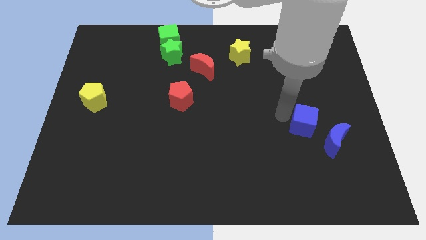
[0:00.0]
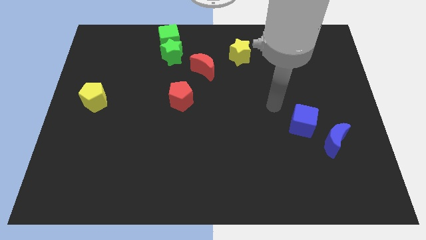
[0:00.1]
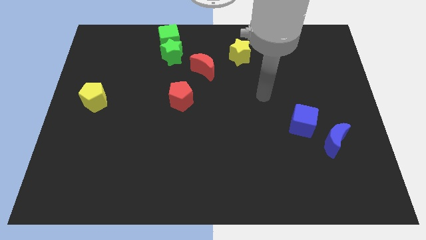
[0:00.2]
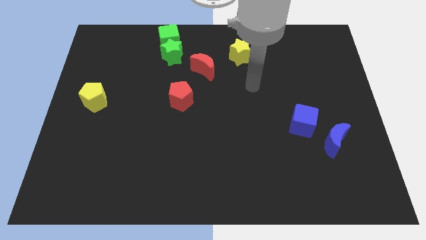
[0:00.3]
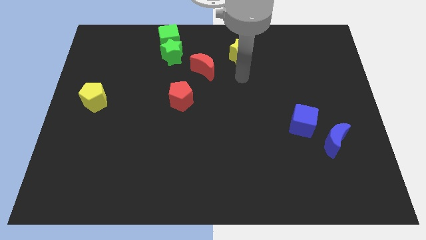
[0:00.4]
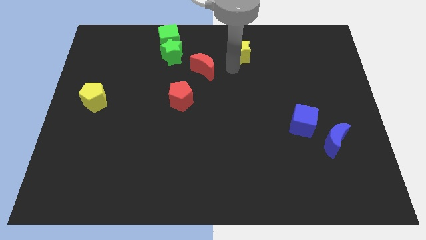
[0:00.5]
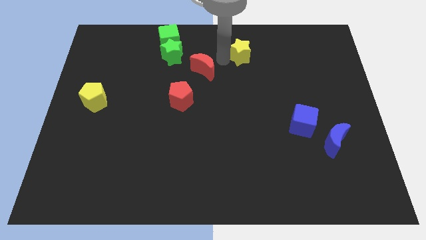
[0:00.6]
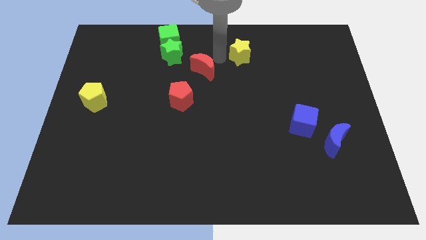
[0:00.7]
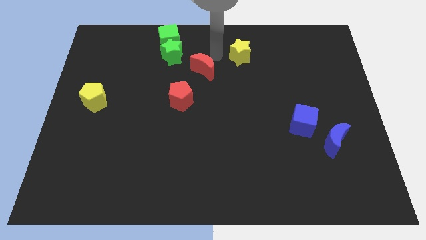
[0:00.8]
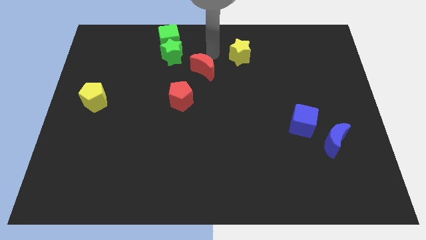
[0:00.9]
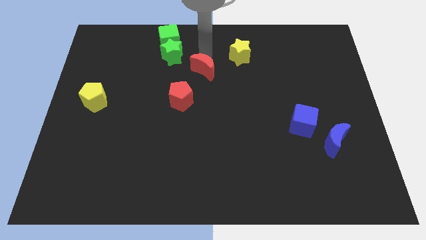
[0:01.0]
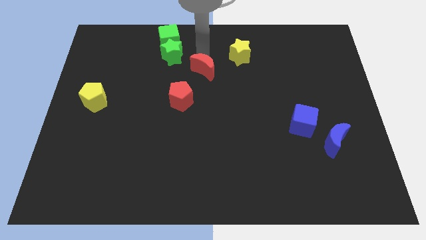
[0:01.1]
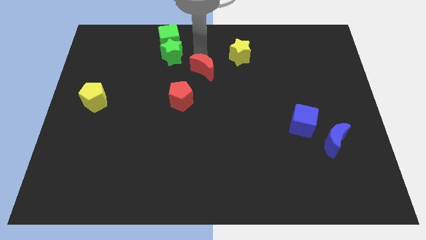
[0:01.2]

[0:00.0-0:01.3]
move the arm to the top of the red crescent

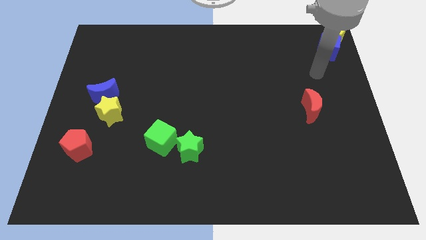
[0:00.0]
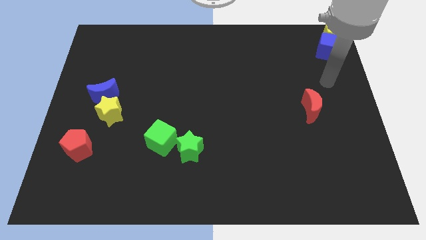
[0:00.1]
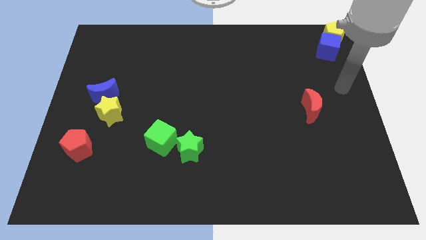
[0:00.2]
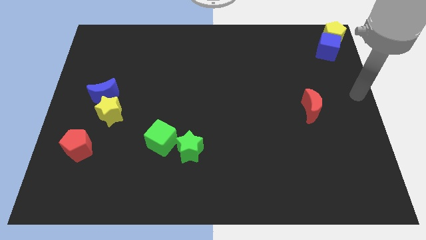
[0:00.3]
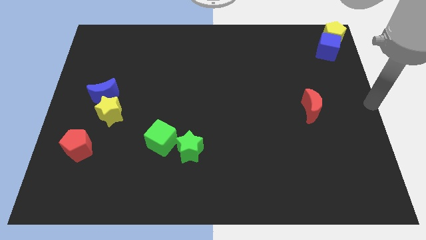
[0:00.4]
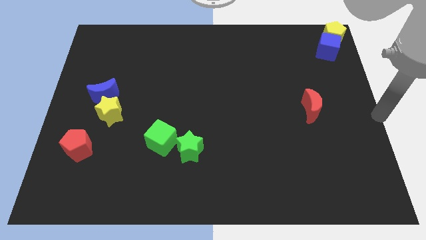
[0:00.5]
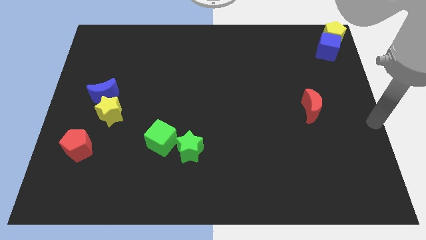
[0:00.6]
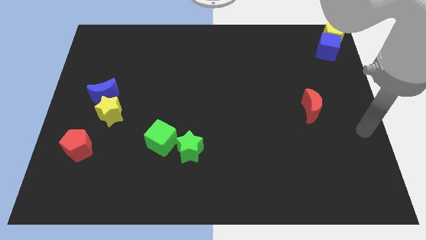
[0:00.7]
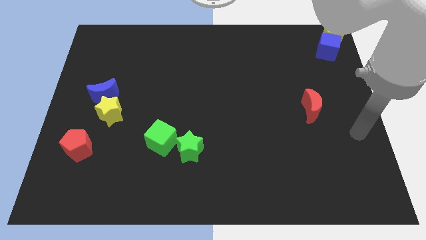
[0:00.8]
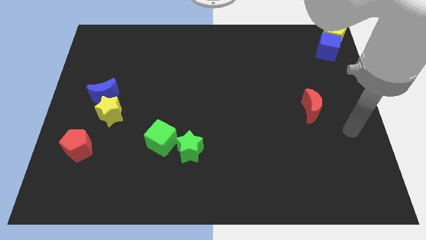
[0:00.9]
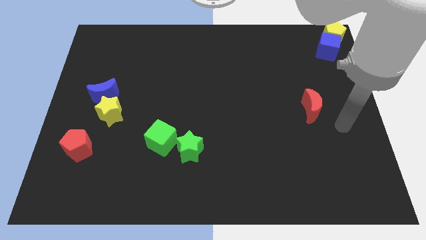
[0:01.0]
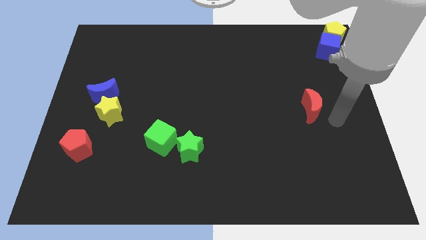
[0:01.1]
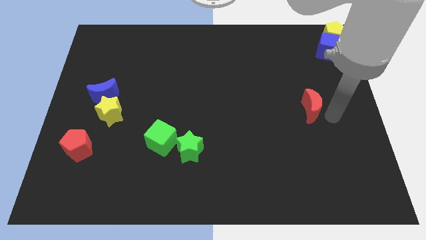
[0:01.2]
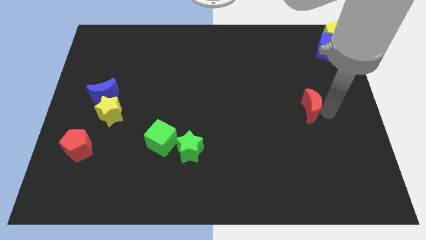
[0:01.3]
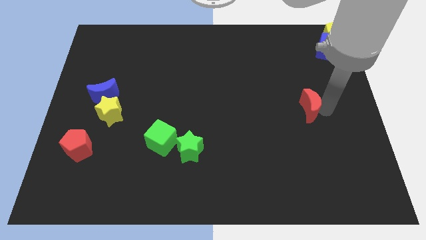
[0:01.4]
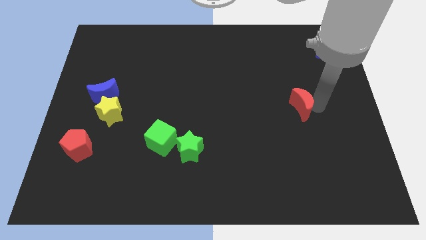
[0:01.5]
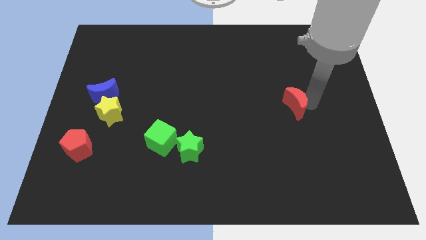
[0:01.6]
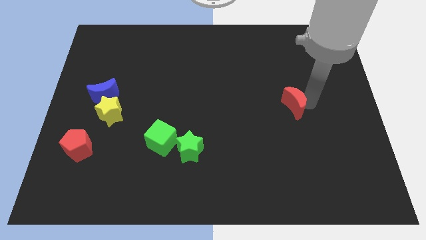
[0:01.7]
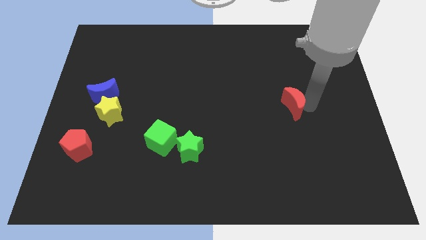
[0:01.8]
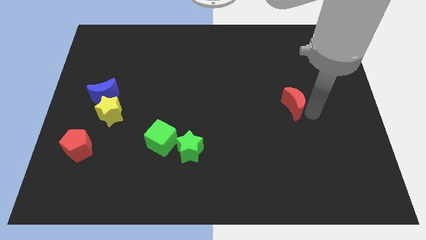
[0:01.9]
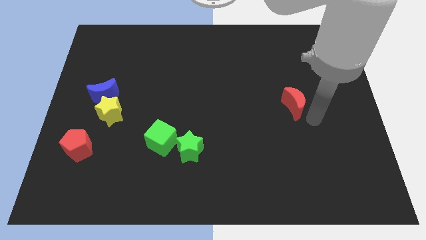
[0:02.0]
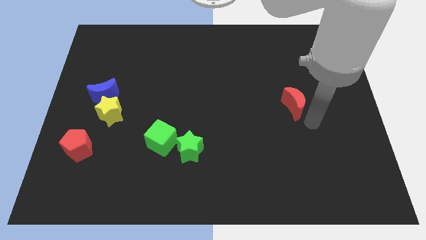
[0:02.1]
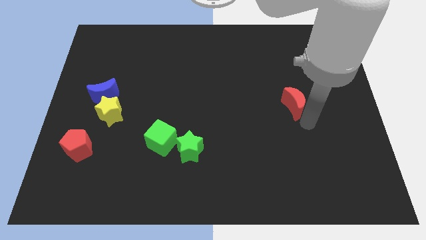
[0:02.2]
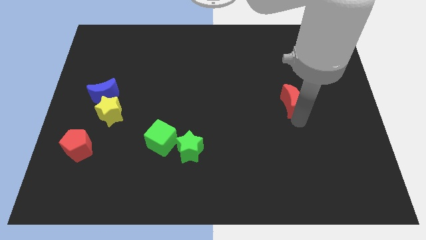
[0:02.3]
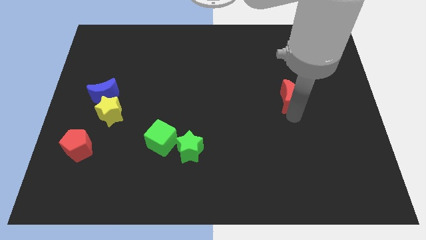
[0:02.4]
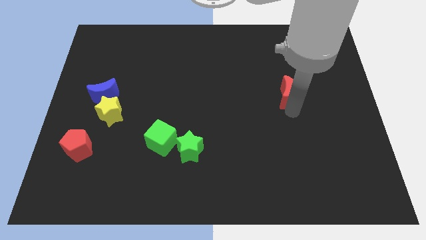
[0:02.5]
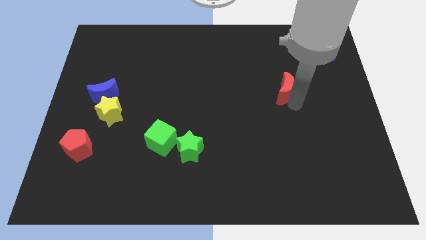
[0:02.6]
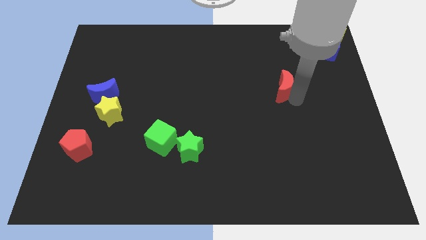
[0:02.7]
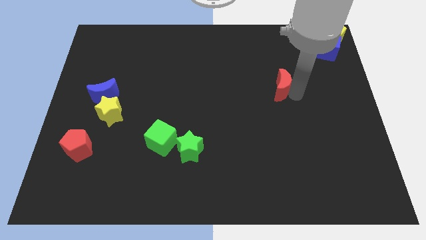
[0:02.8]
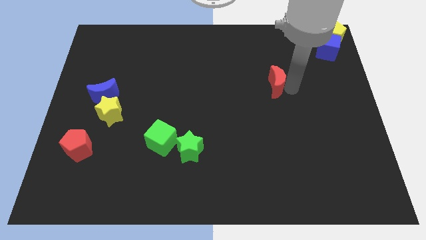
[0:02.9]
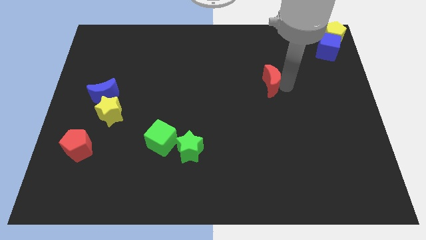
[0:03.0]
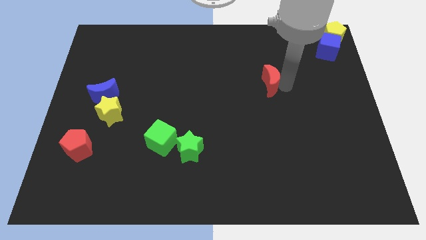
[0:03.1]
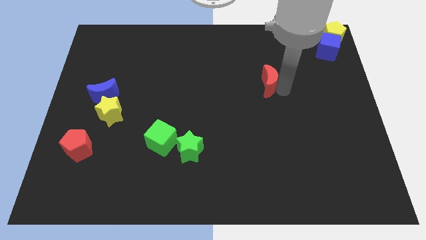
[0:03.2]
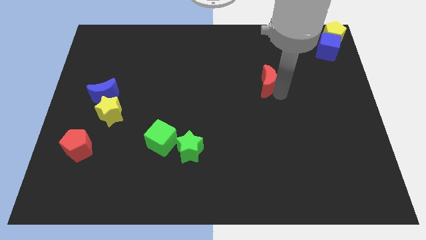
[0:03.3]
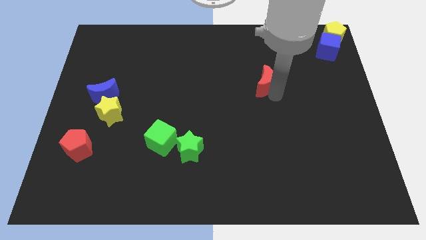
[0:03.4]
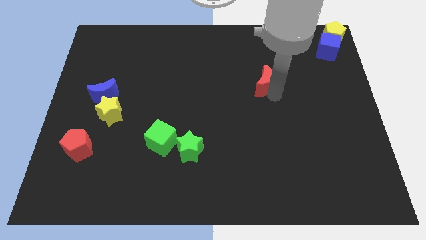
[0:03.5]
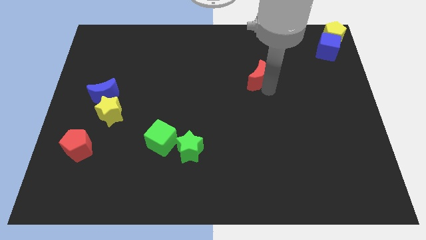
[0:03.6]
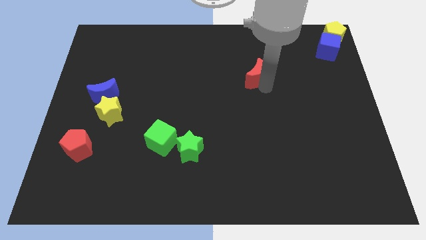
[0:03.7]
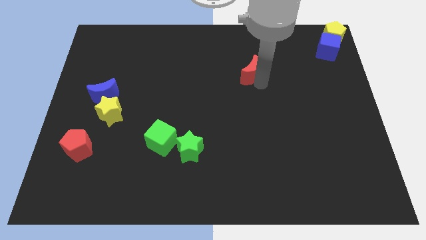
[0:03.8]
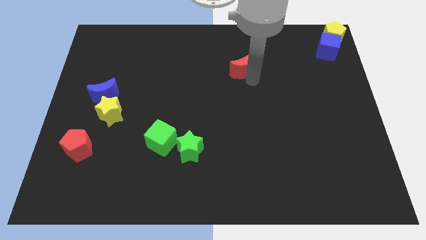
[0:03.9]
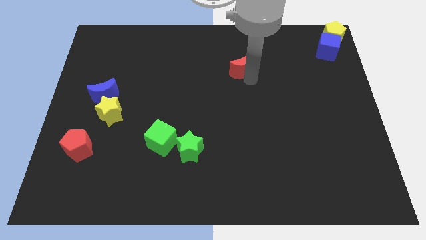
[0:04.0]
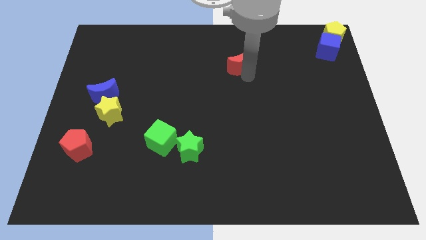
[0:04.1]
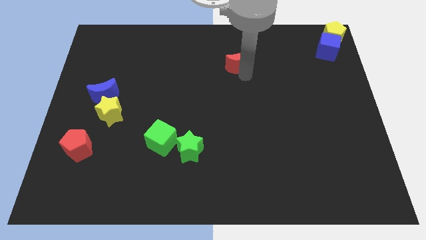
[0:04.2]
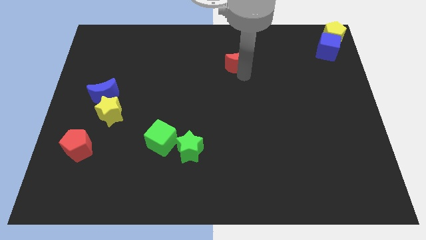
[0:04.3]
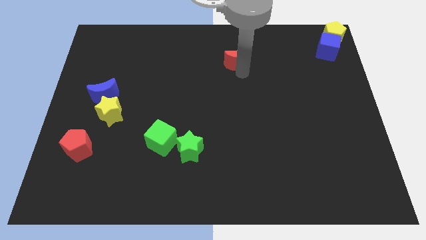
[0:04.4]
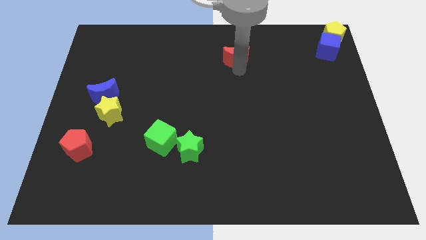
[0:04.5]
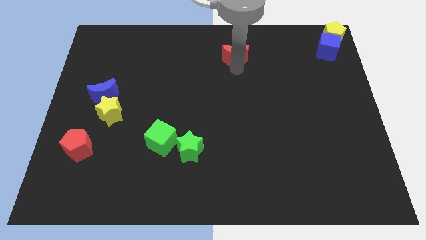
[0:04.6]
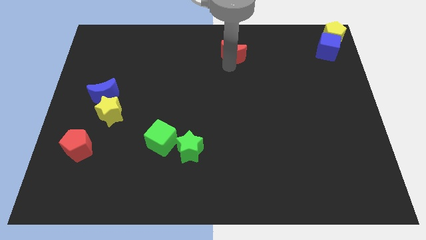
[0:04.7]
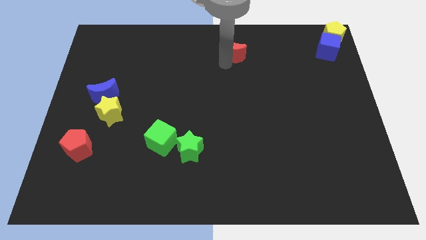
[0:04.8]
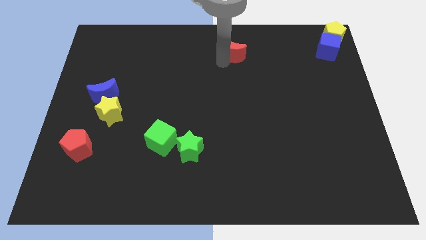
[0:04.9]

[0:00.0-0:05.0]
push the red crescent to the top center of the board

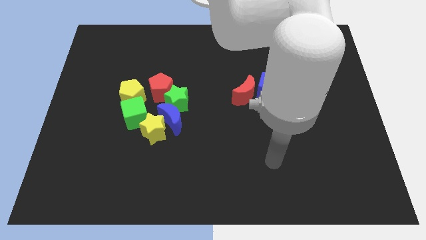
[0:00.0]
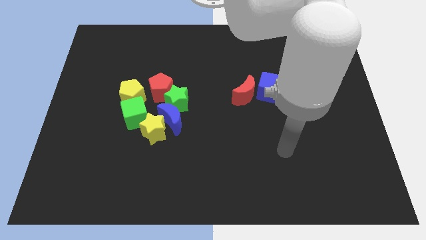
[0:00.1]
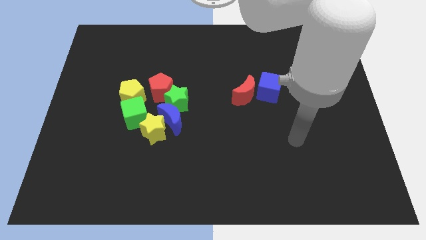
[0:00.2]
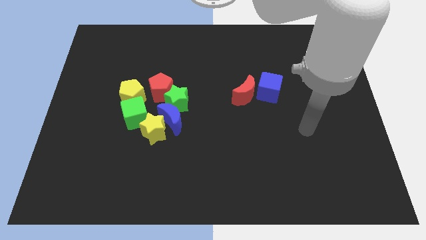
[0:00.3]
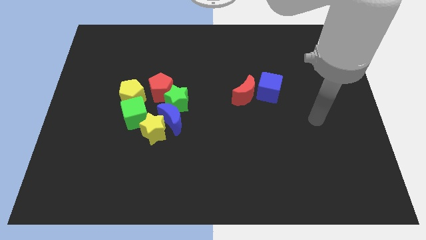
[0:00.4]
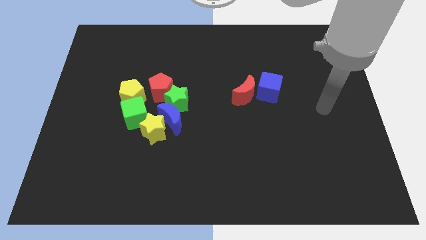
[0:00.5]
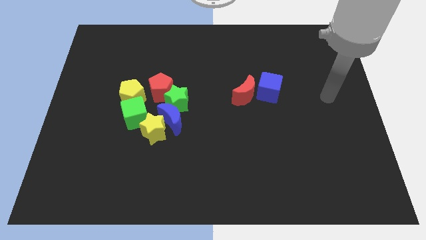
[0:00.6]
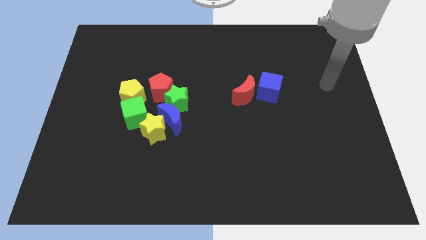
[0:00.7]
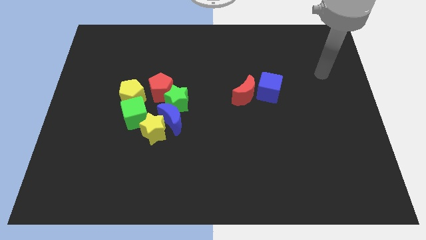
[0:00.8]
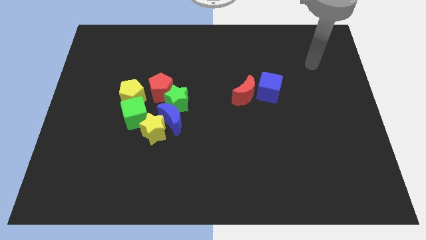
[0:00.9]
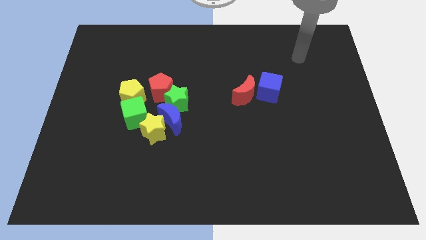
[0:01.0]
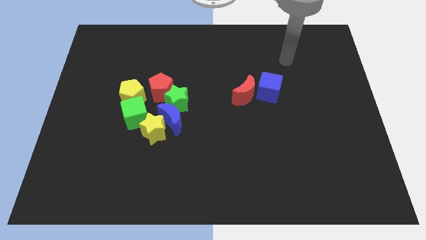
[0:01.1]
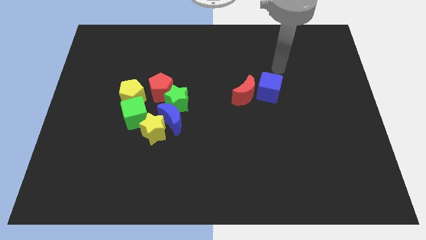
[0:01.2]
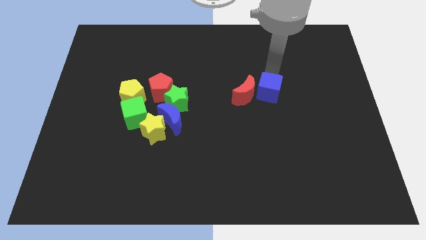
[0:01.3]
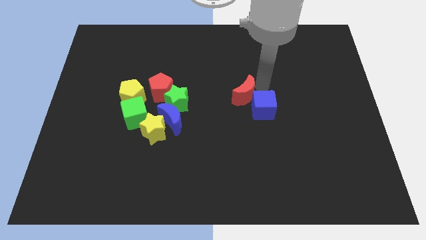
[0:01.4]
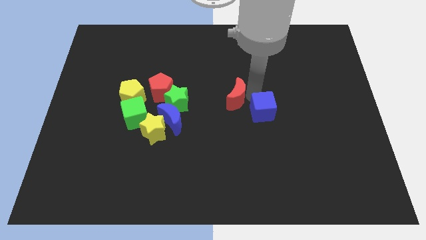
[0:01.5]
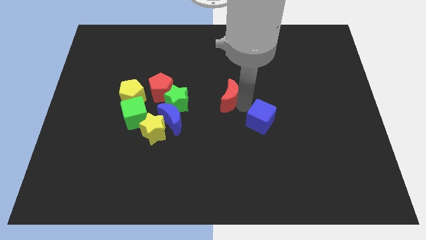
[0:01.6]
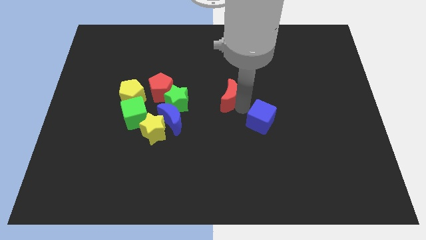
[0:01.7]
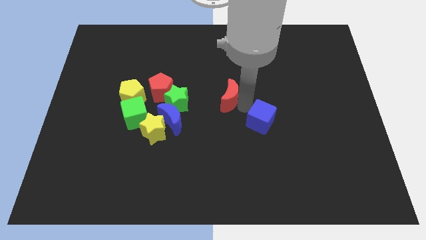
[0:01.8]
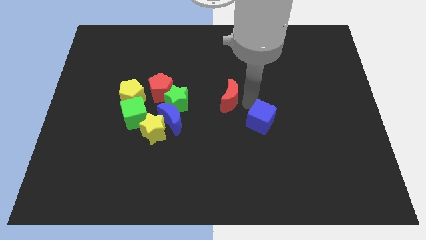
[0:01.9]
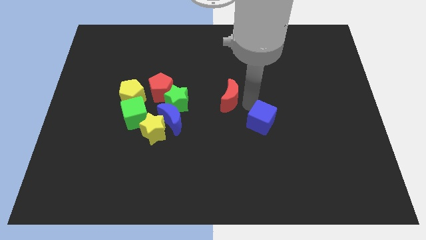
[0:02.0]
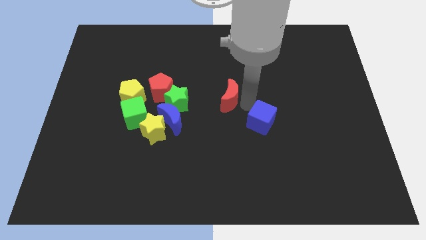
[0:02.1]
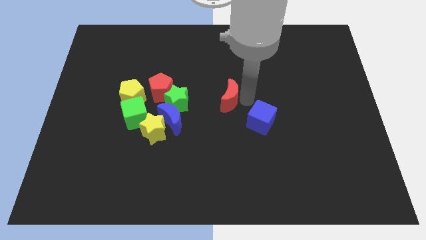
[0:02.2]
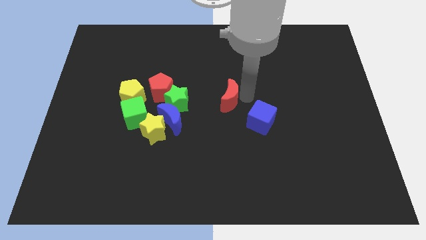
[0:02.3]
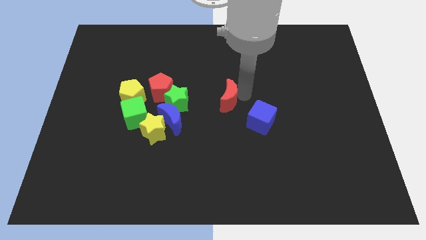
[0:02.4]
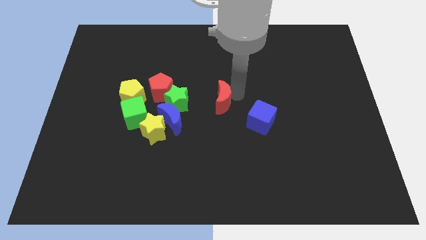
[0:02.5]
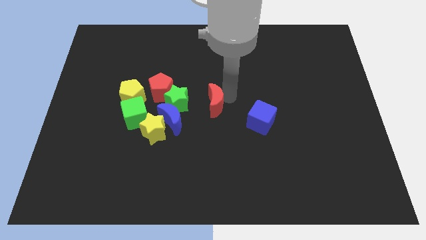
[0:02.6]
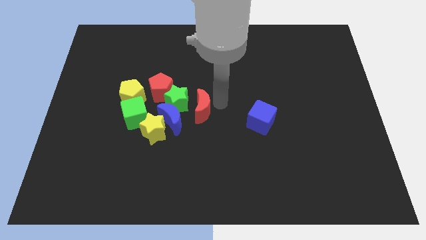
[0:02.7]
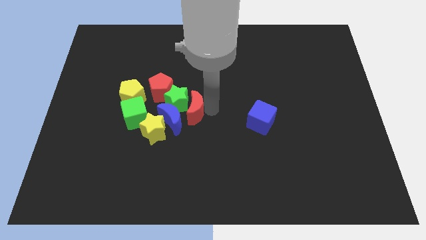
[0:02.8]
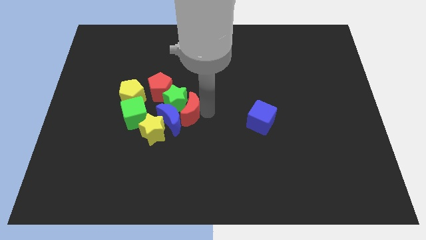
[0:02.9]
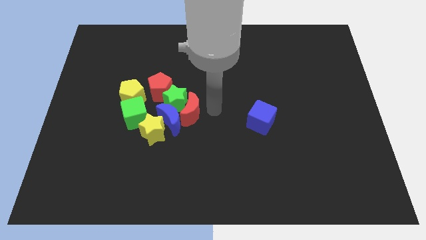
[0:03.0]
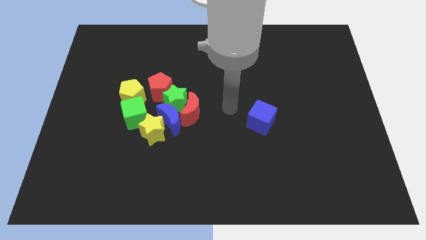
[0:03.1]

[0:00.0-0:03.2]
push the red moon into the group of blocks
